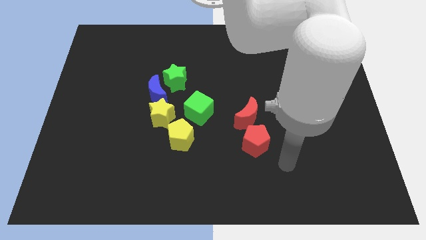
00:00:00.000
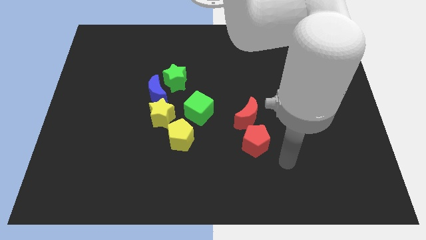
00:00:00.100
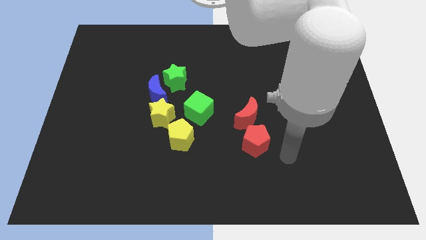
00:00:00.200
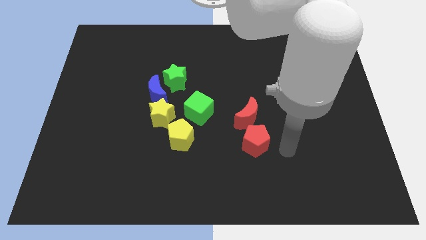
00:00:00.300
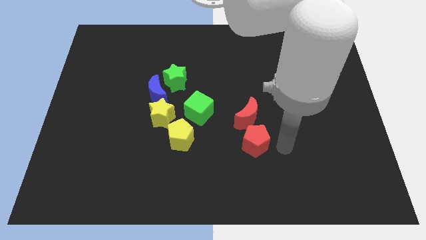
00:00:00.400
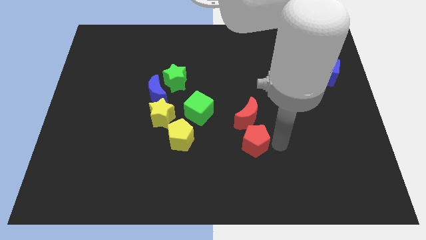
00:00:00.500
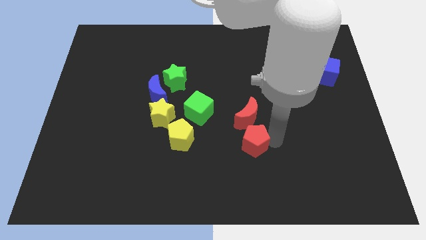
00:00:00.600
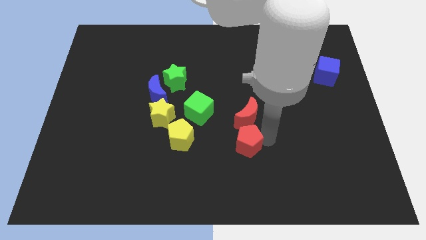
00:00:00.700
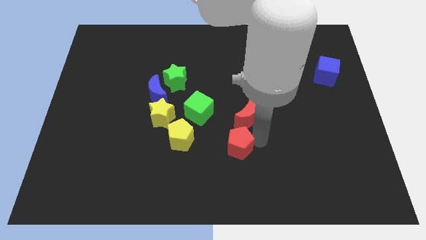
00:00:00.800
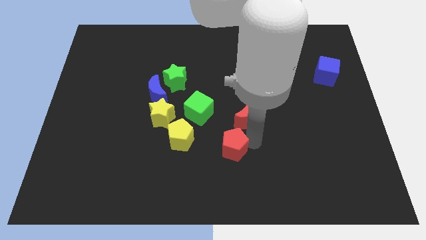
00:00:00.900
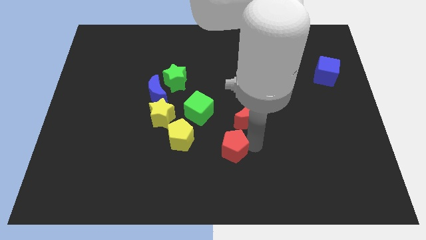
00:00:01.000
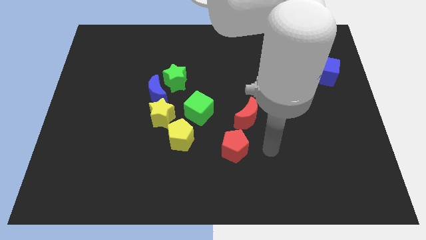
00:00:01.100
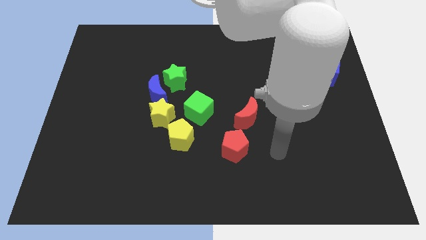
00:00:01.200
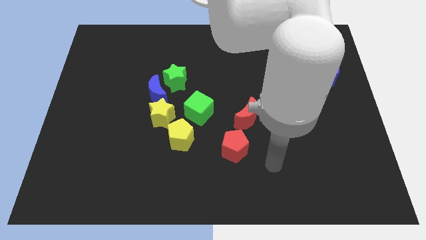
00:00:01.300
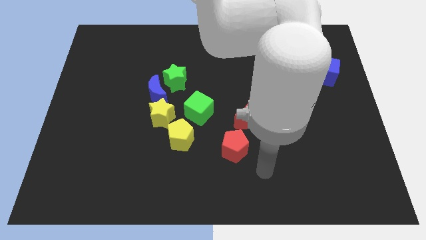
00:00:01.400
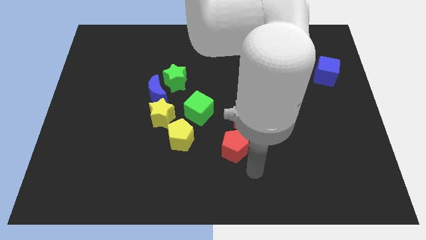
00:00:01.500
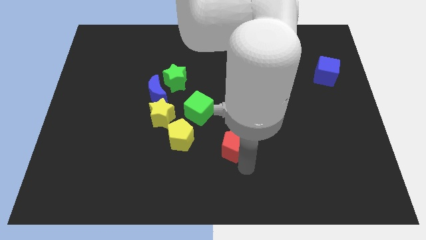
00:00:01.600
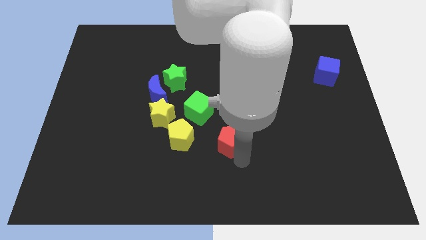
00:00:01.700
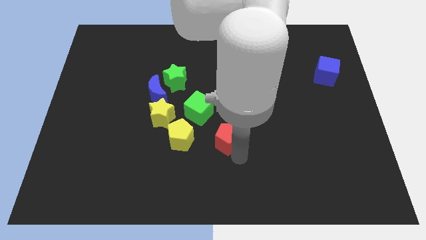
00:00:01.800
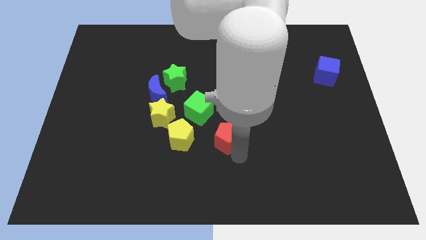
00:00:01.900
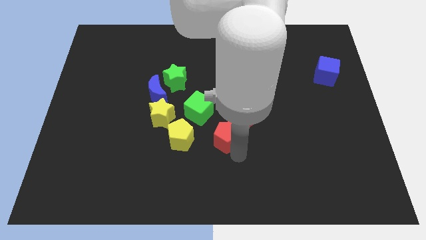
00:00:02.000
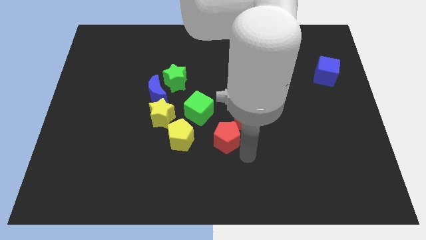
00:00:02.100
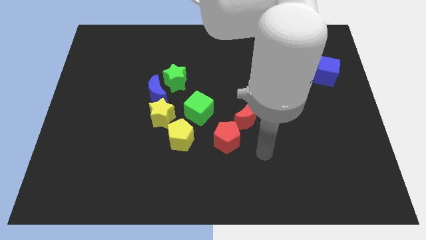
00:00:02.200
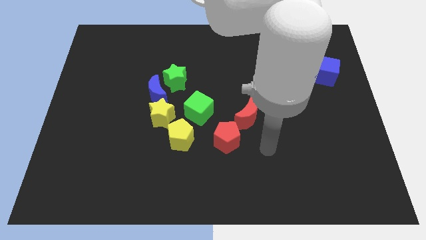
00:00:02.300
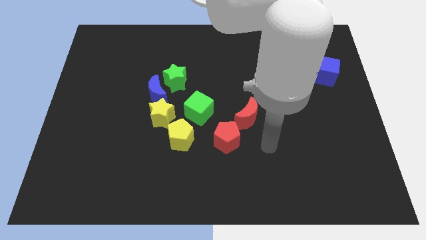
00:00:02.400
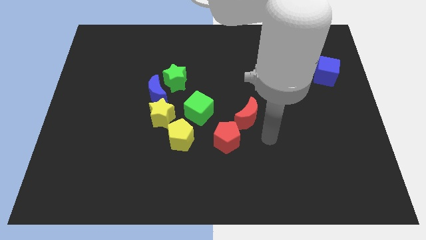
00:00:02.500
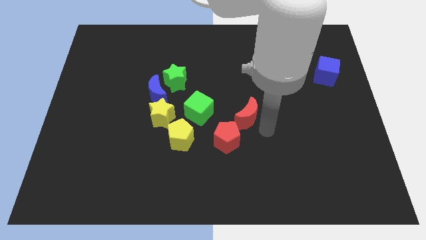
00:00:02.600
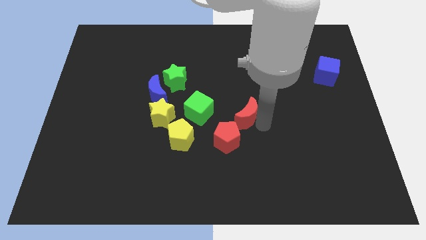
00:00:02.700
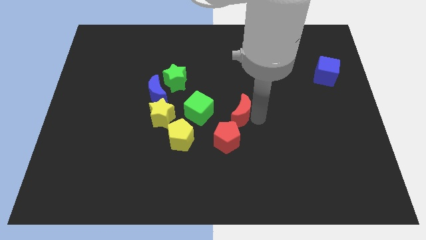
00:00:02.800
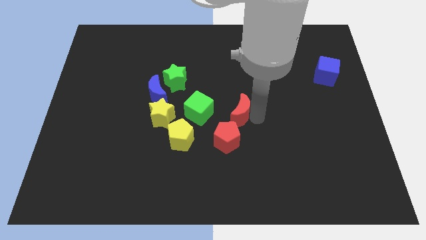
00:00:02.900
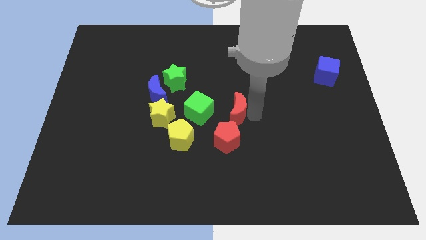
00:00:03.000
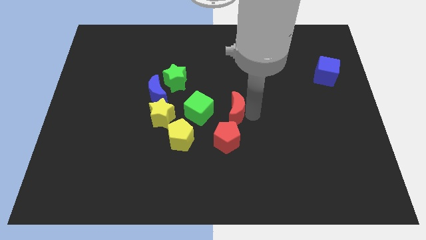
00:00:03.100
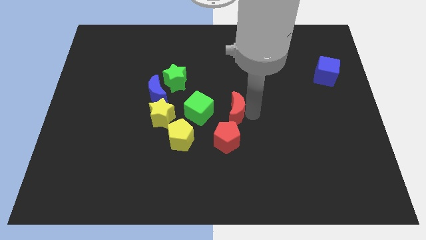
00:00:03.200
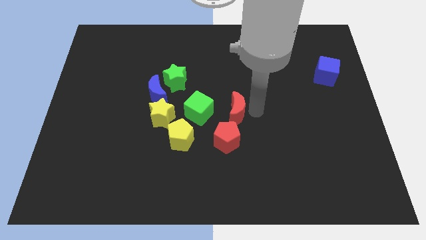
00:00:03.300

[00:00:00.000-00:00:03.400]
move the red pentagon and red crescent in a vertical line in the center of the board

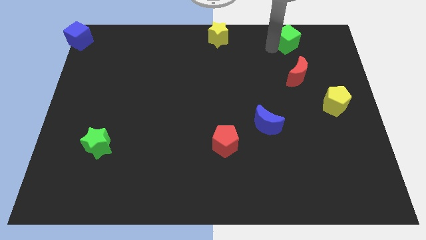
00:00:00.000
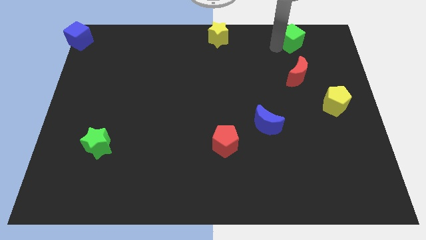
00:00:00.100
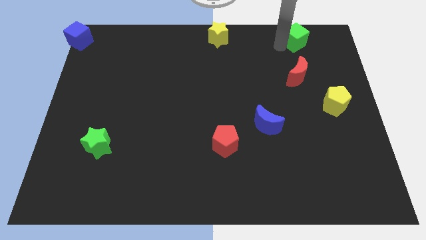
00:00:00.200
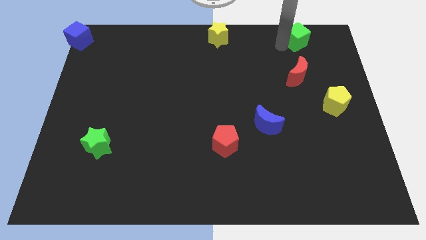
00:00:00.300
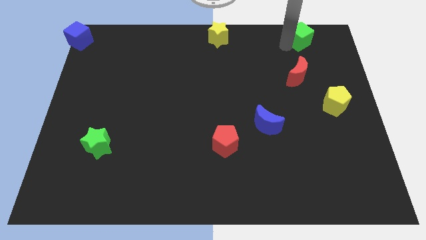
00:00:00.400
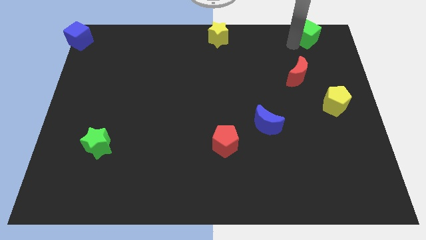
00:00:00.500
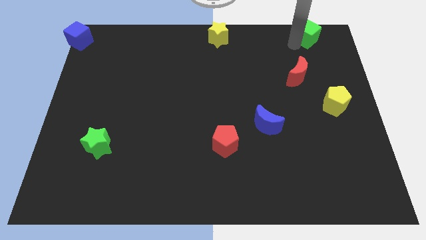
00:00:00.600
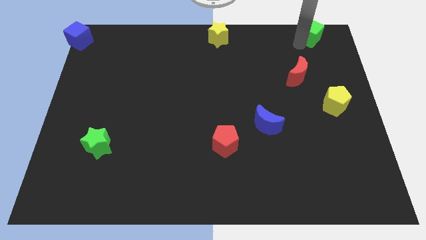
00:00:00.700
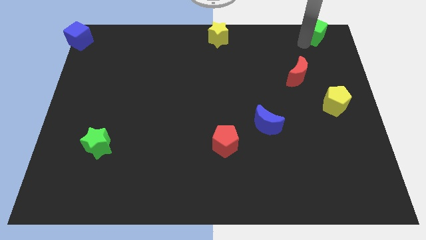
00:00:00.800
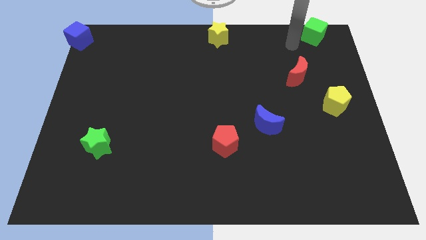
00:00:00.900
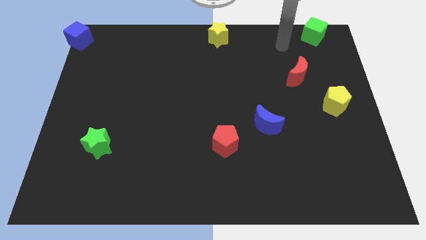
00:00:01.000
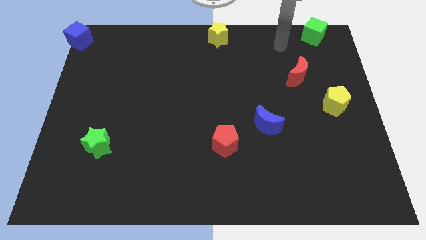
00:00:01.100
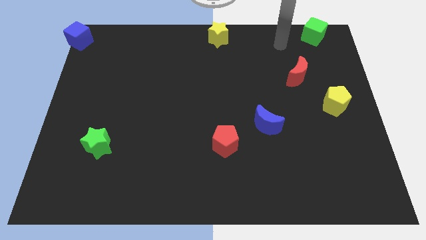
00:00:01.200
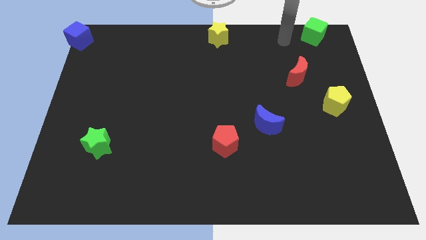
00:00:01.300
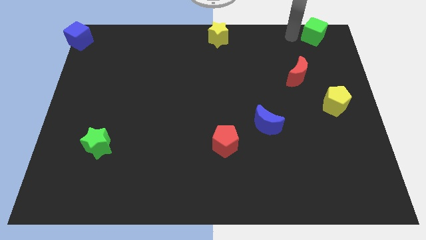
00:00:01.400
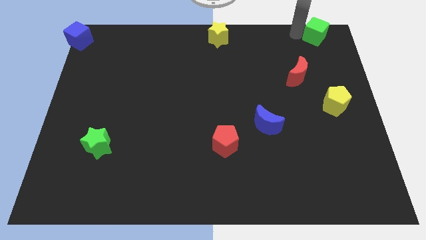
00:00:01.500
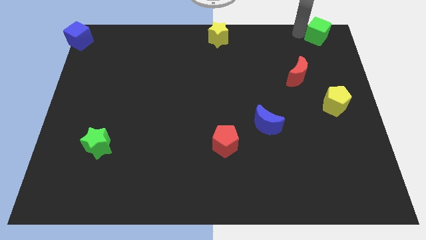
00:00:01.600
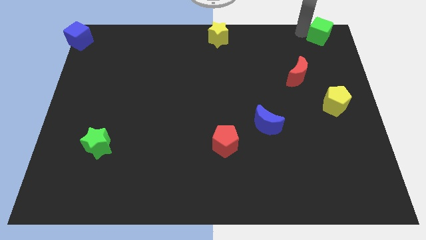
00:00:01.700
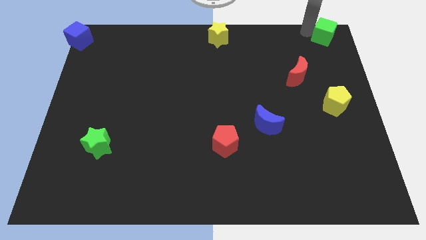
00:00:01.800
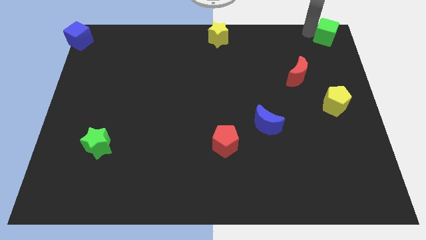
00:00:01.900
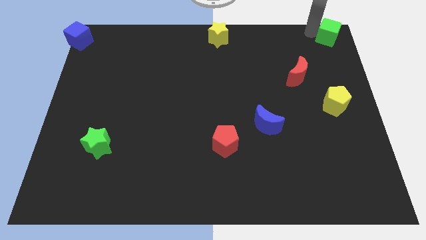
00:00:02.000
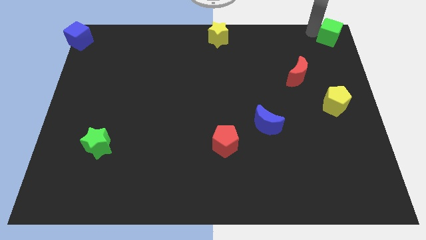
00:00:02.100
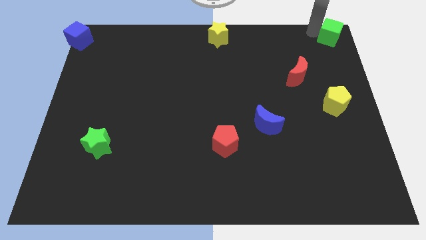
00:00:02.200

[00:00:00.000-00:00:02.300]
place the green cube at the top right corner of the board

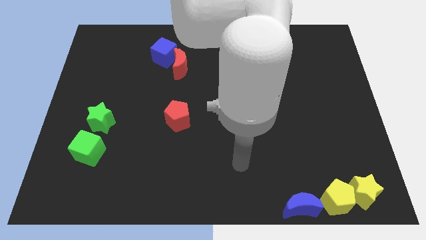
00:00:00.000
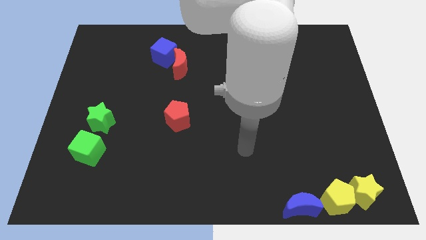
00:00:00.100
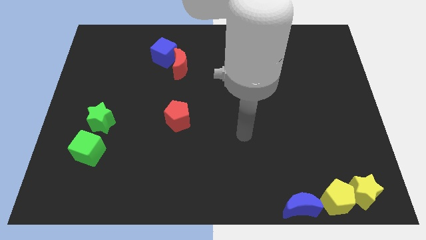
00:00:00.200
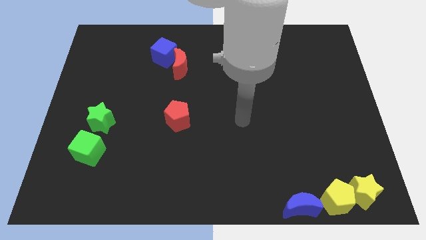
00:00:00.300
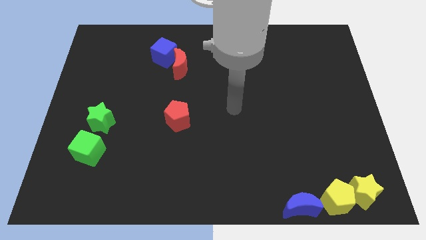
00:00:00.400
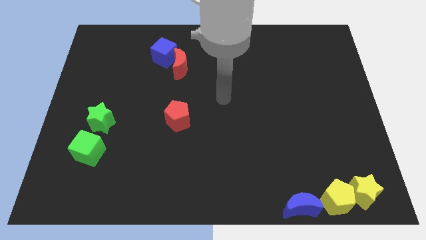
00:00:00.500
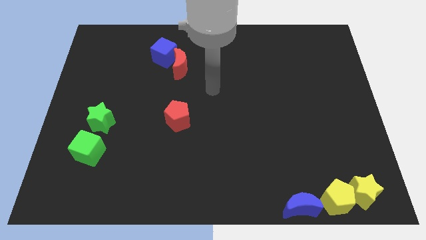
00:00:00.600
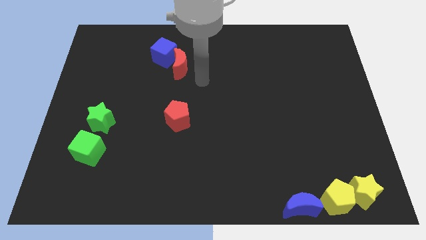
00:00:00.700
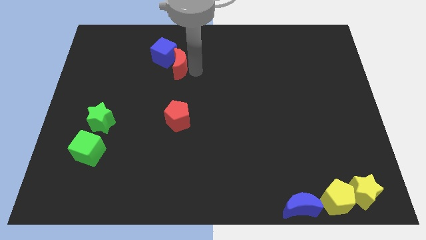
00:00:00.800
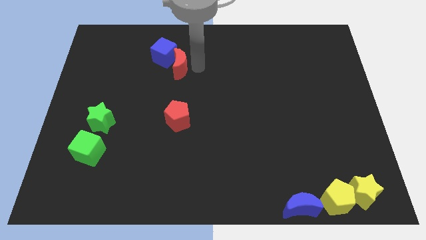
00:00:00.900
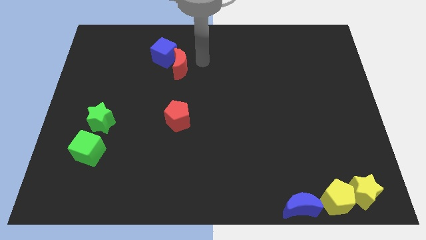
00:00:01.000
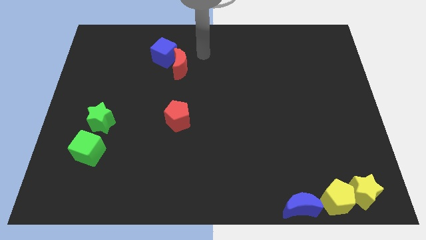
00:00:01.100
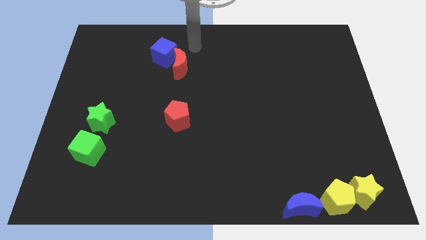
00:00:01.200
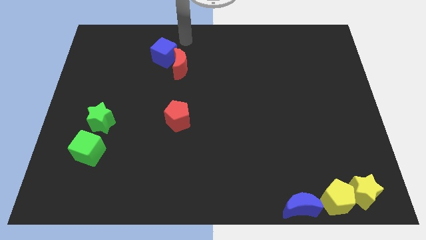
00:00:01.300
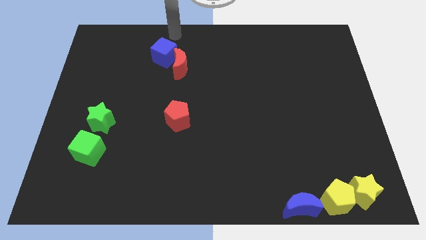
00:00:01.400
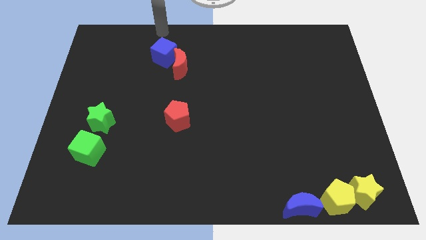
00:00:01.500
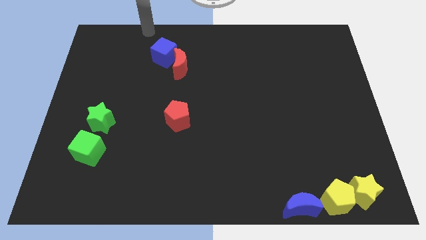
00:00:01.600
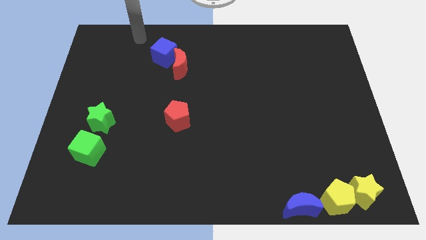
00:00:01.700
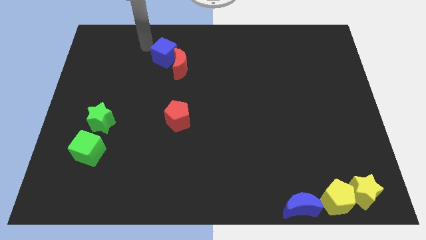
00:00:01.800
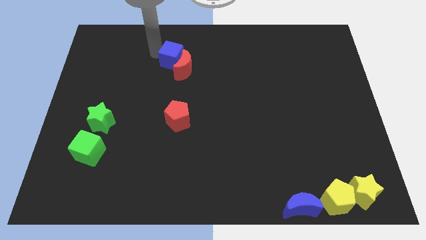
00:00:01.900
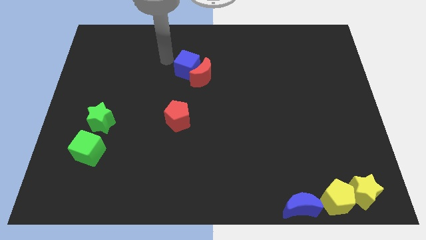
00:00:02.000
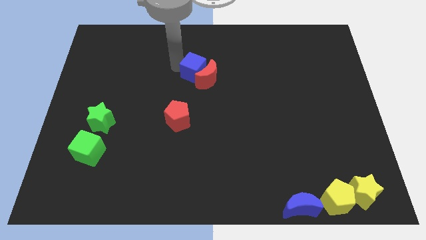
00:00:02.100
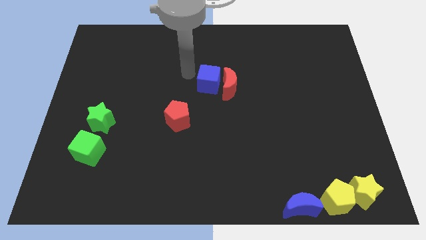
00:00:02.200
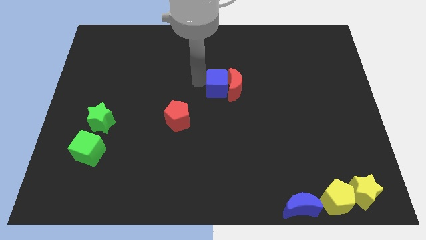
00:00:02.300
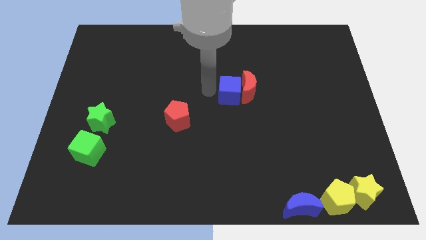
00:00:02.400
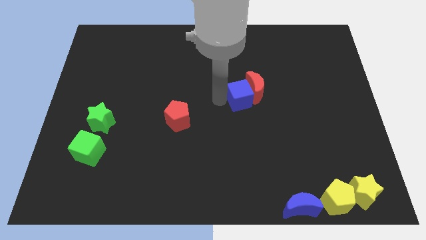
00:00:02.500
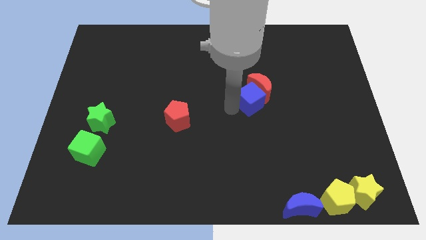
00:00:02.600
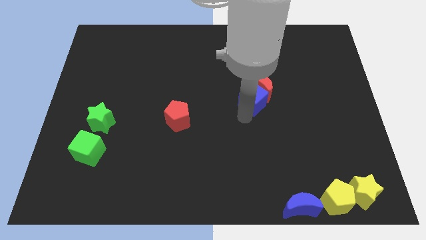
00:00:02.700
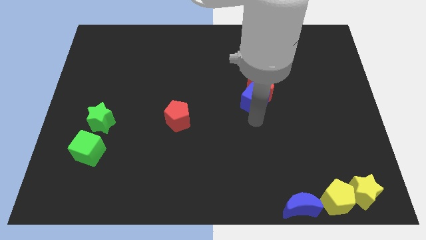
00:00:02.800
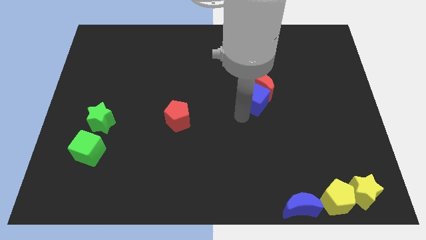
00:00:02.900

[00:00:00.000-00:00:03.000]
move the blue cube and the red moon towards the group of blocks

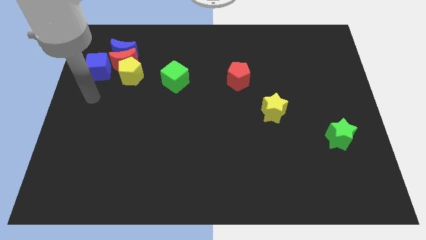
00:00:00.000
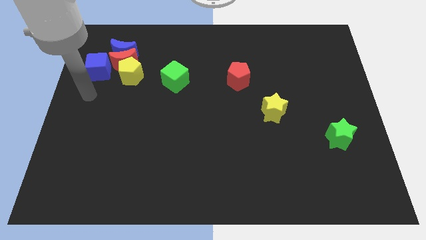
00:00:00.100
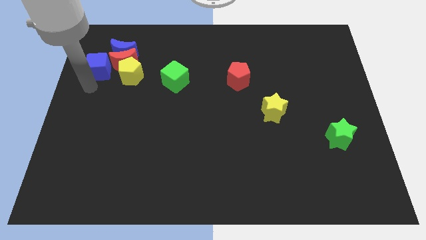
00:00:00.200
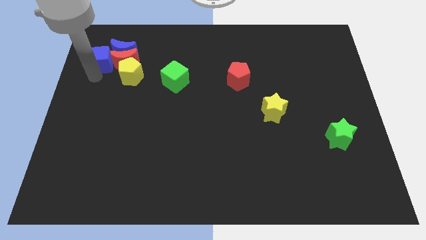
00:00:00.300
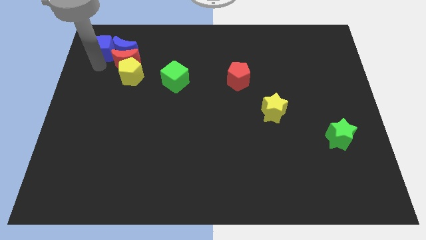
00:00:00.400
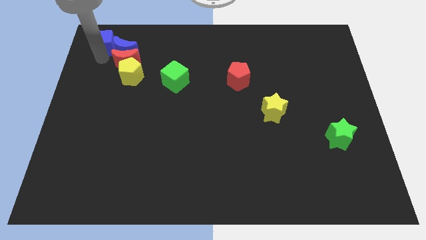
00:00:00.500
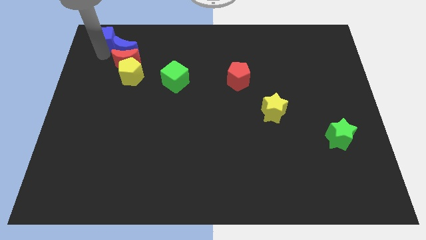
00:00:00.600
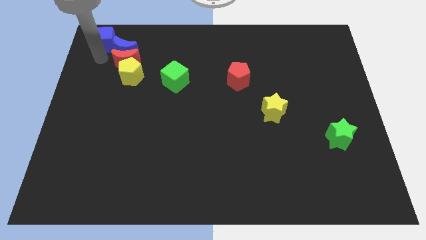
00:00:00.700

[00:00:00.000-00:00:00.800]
push blue cube slightly towards top
